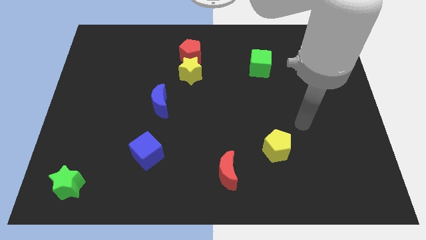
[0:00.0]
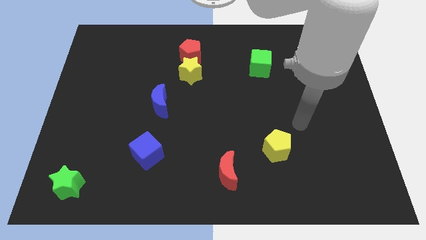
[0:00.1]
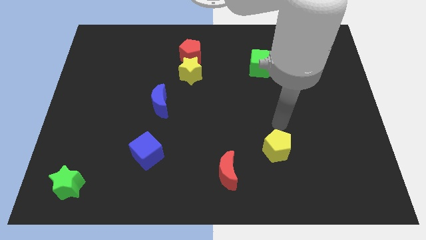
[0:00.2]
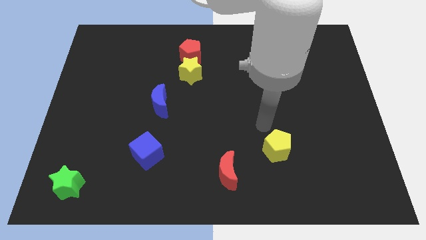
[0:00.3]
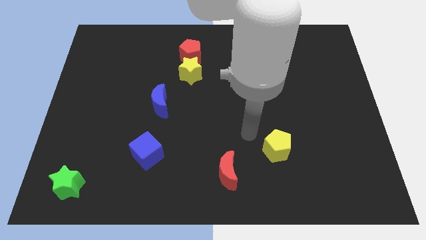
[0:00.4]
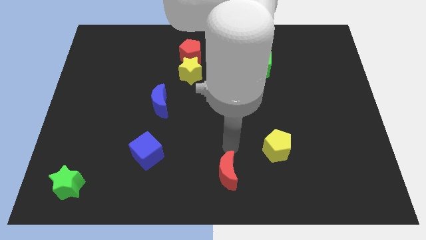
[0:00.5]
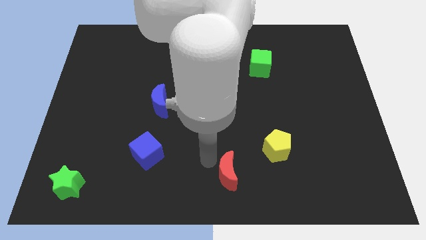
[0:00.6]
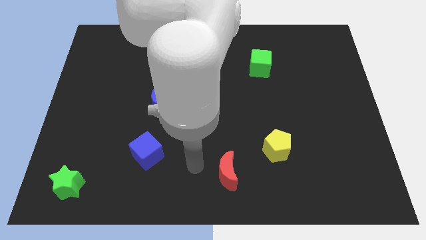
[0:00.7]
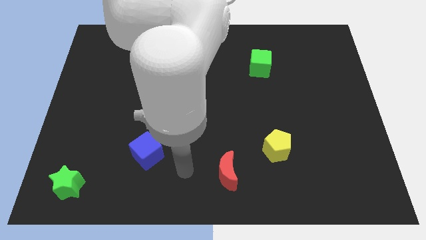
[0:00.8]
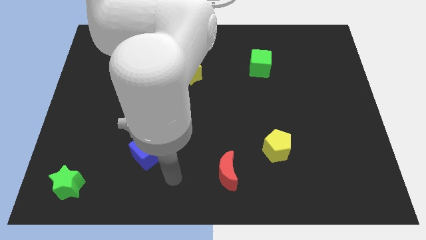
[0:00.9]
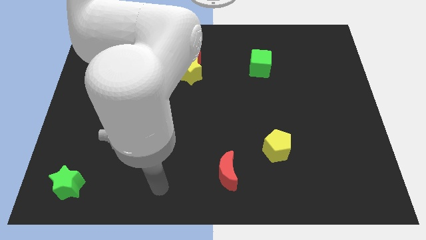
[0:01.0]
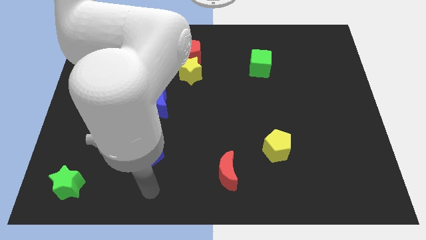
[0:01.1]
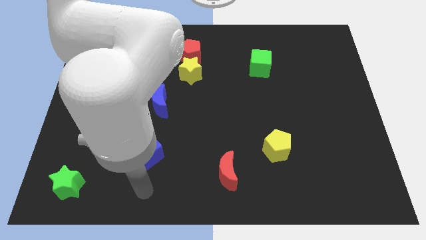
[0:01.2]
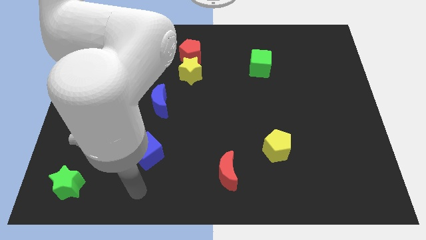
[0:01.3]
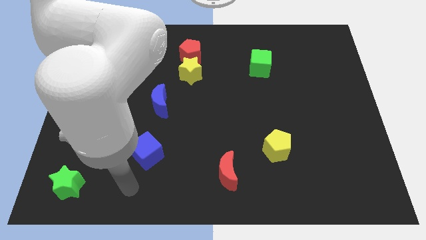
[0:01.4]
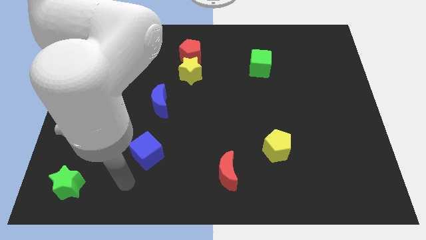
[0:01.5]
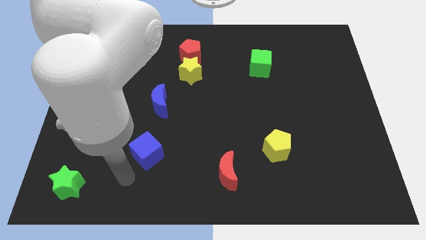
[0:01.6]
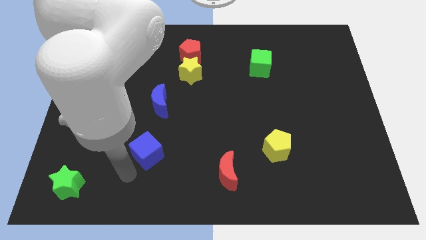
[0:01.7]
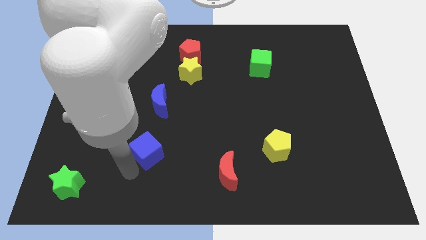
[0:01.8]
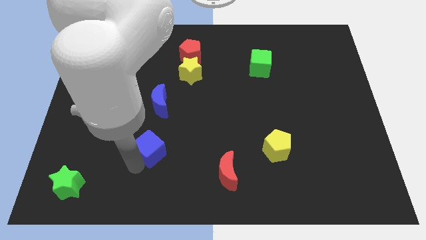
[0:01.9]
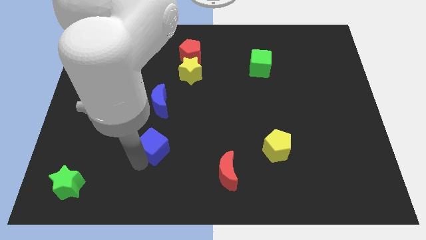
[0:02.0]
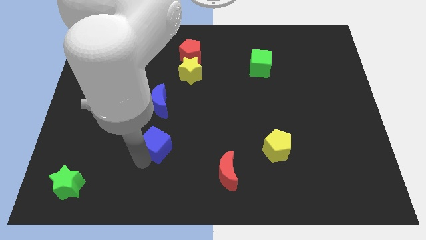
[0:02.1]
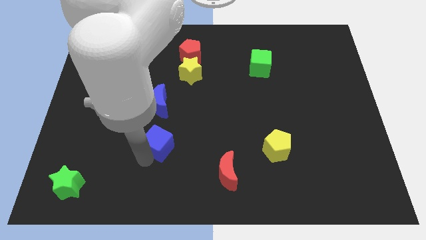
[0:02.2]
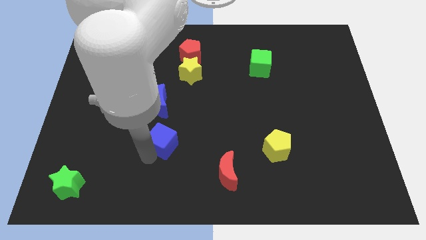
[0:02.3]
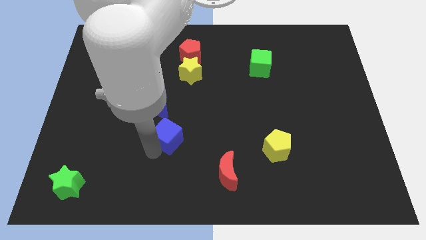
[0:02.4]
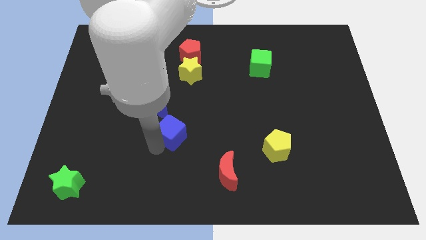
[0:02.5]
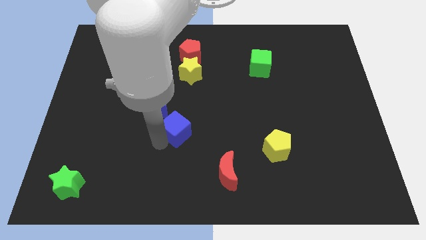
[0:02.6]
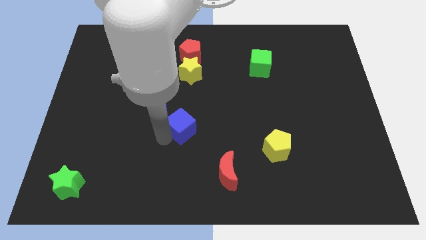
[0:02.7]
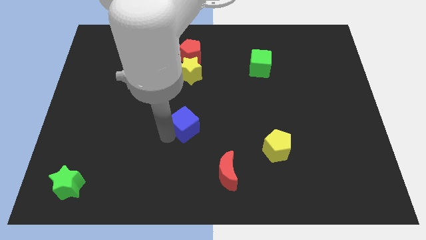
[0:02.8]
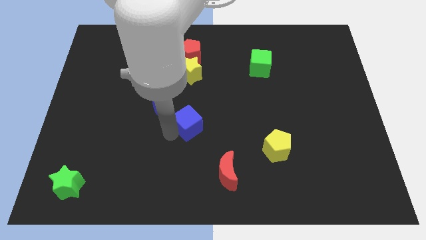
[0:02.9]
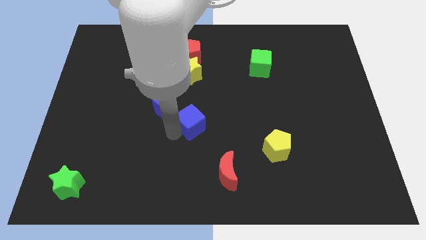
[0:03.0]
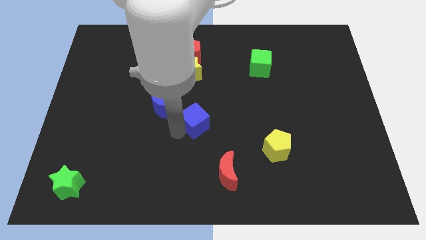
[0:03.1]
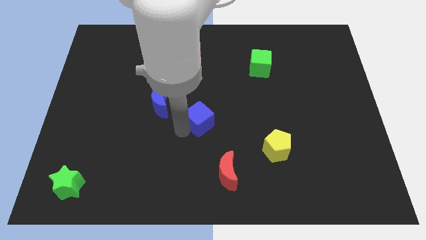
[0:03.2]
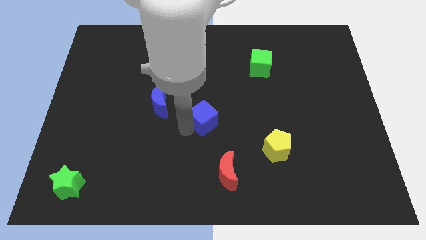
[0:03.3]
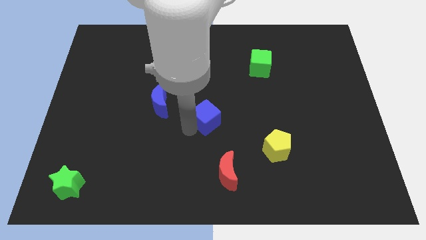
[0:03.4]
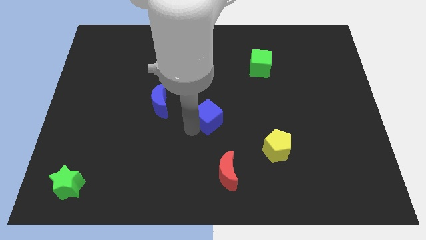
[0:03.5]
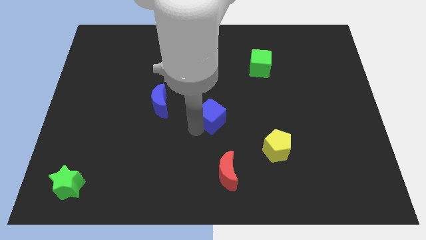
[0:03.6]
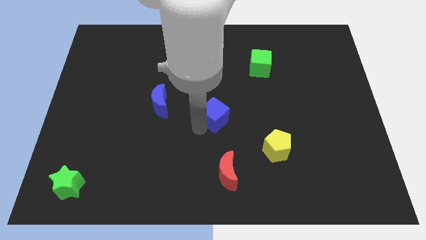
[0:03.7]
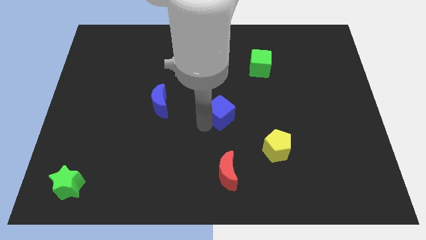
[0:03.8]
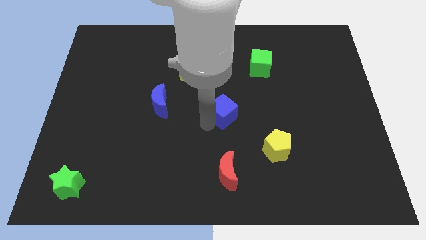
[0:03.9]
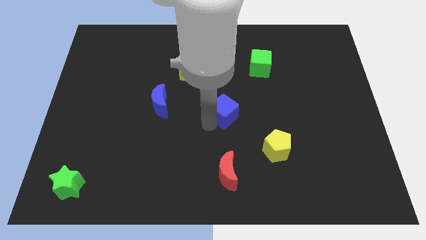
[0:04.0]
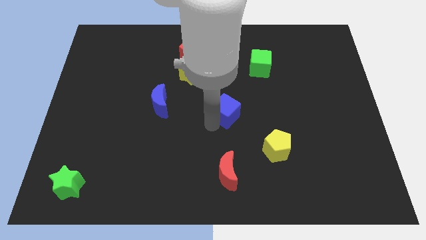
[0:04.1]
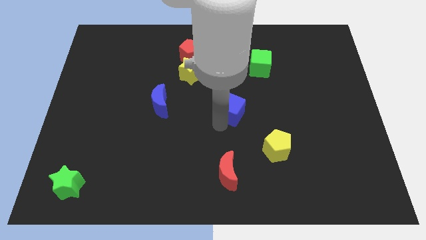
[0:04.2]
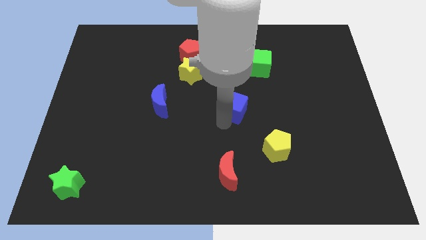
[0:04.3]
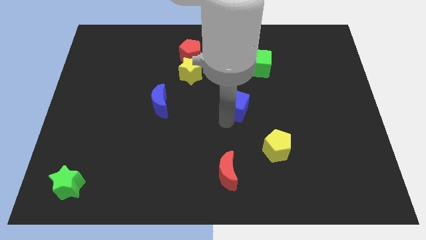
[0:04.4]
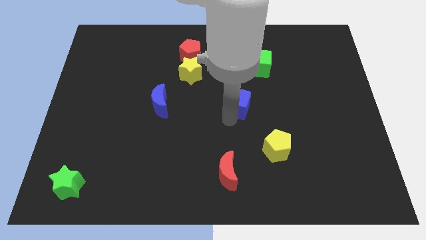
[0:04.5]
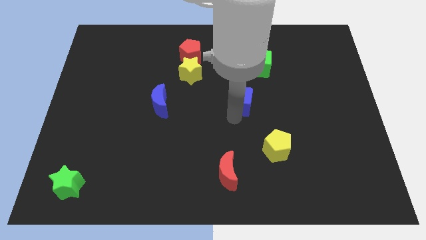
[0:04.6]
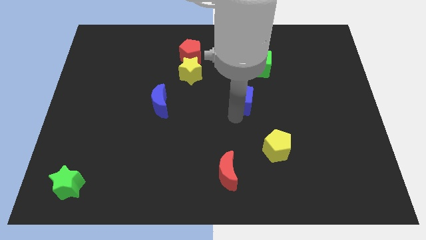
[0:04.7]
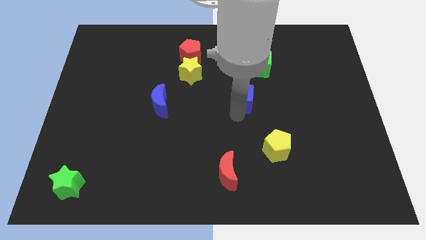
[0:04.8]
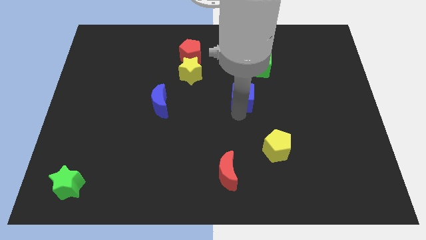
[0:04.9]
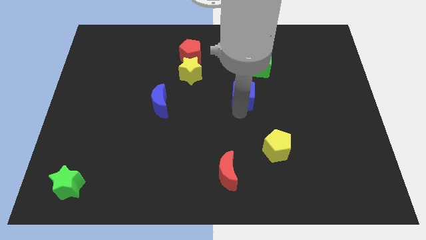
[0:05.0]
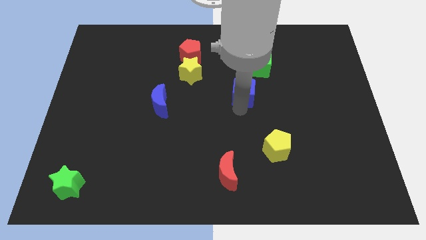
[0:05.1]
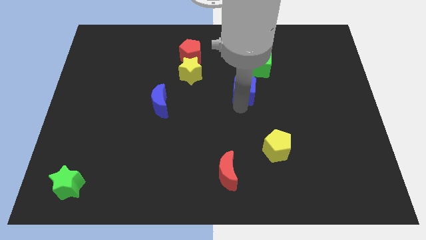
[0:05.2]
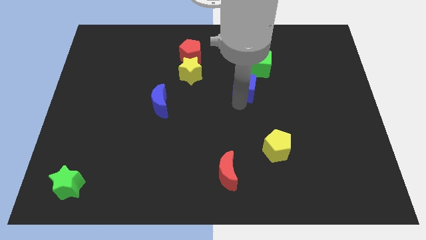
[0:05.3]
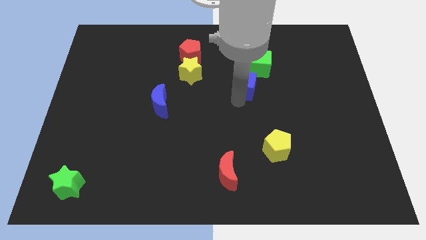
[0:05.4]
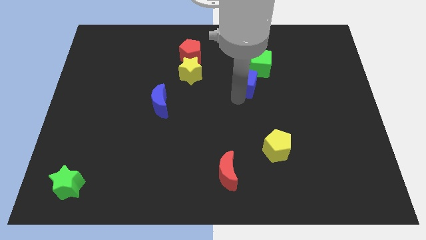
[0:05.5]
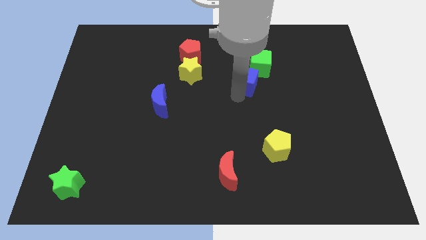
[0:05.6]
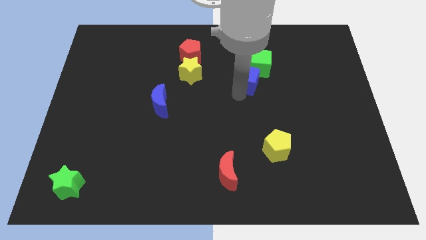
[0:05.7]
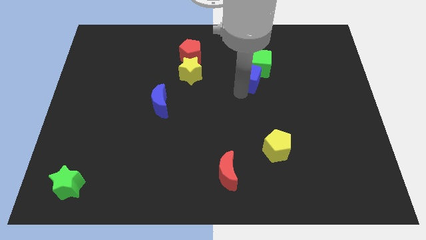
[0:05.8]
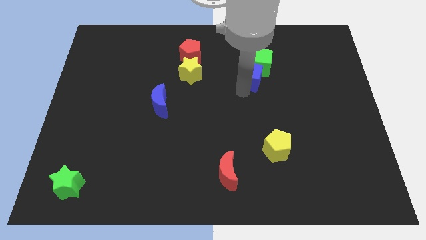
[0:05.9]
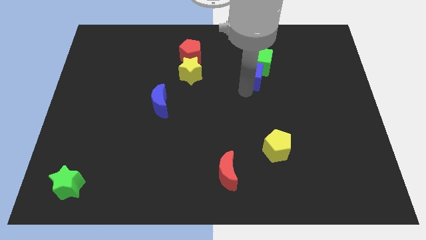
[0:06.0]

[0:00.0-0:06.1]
slide the blue cube close to the green cube

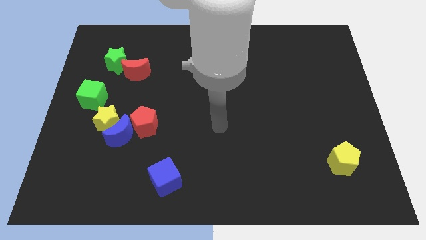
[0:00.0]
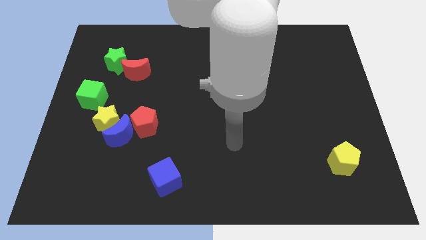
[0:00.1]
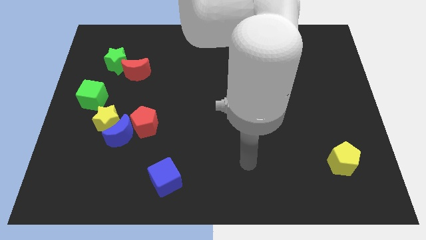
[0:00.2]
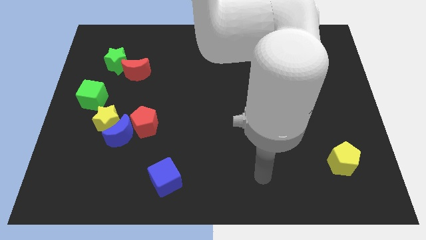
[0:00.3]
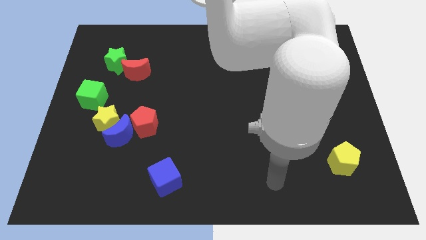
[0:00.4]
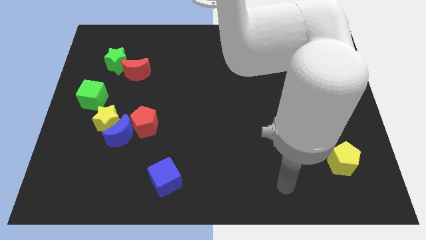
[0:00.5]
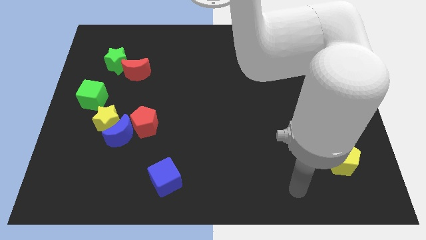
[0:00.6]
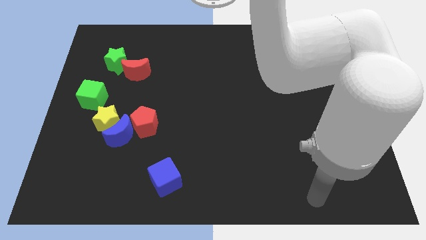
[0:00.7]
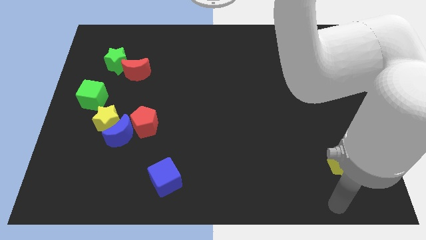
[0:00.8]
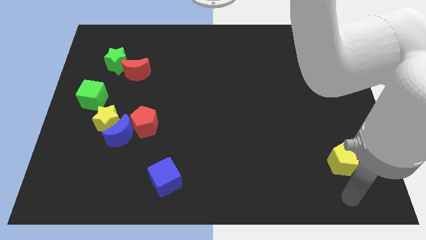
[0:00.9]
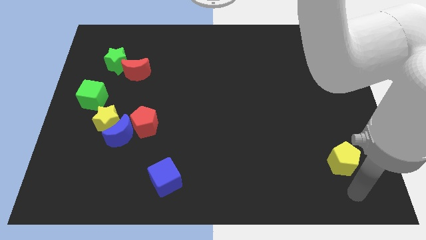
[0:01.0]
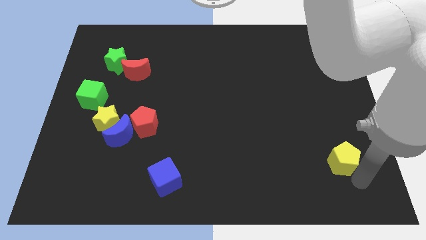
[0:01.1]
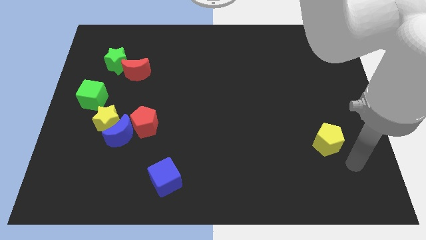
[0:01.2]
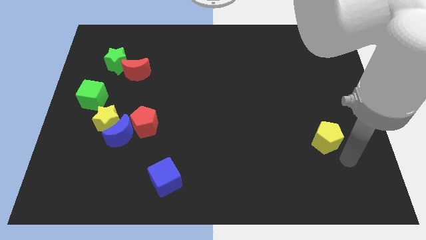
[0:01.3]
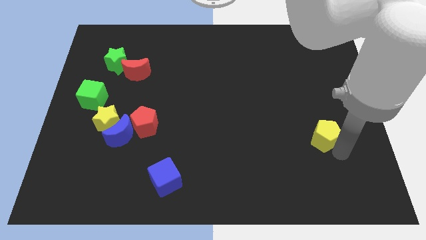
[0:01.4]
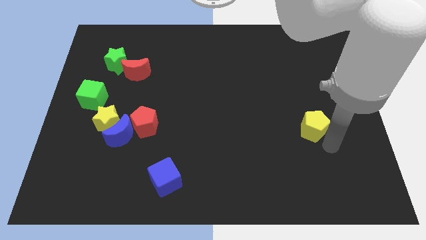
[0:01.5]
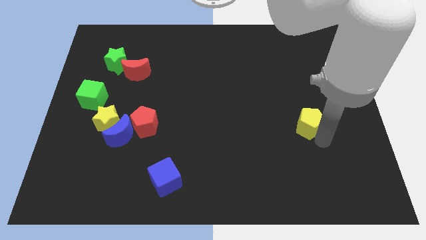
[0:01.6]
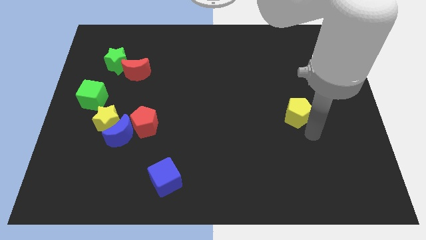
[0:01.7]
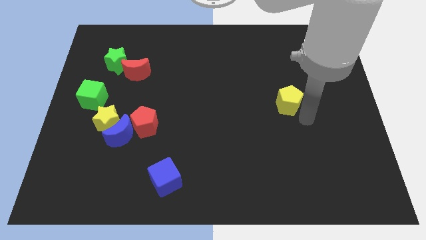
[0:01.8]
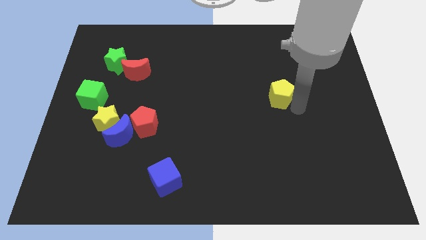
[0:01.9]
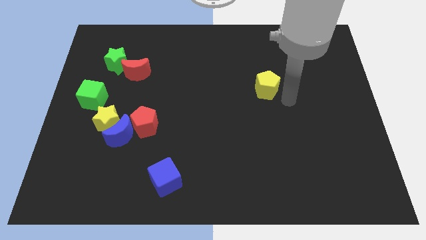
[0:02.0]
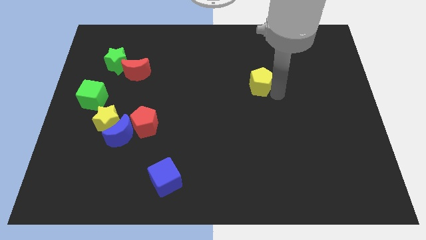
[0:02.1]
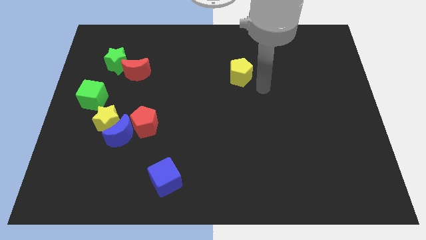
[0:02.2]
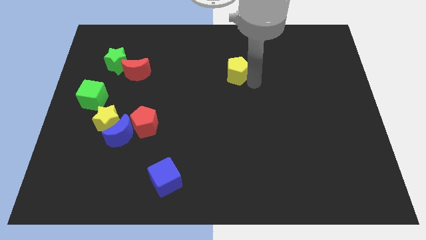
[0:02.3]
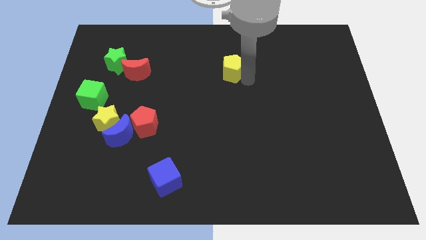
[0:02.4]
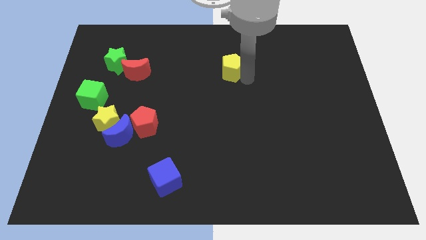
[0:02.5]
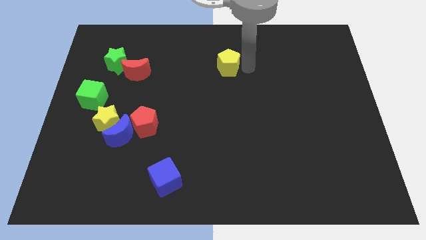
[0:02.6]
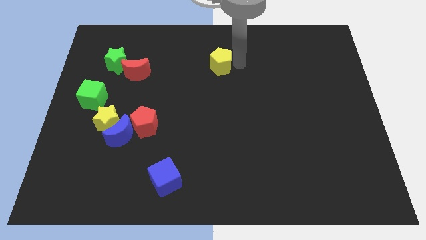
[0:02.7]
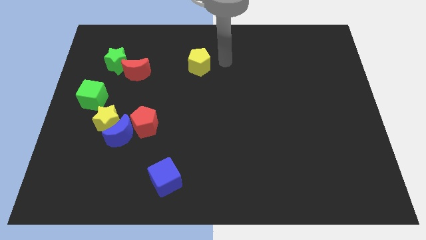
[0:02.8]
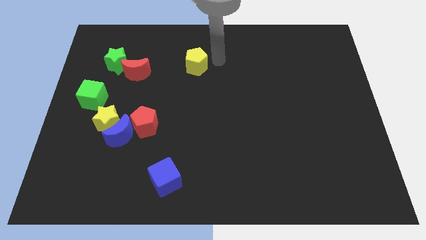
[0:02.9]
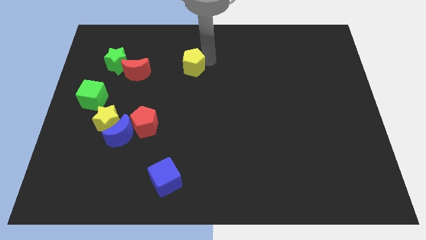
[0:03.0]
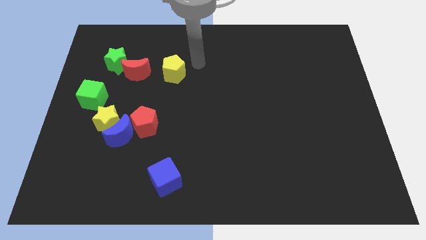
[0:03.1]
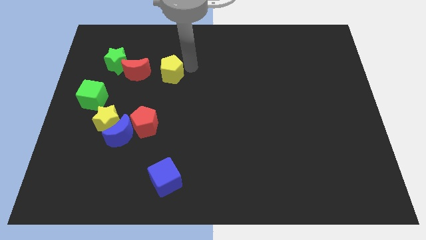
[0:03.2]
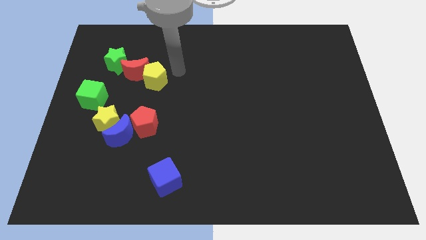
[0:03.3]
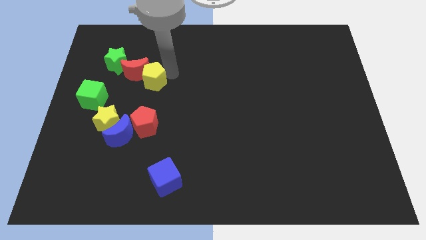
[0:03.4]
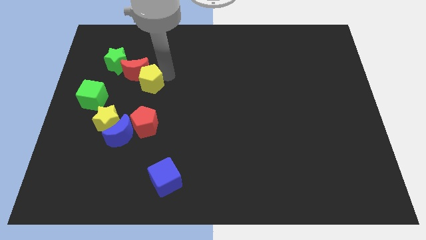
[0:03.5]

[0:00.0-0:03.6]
put the yellow pentagon close to the red moon
